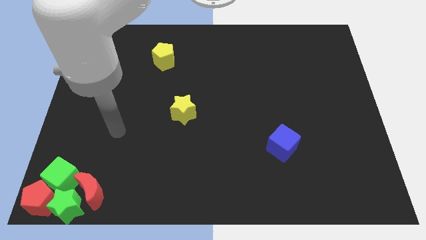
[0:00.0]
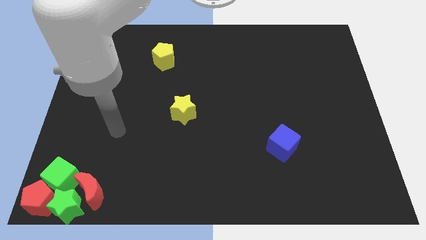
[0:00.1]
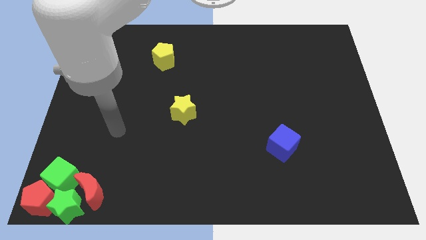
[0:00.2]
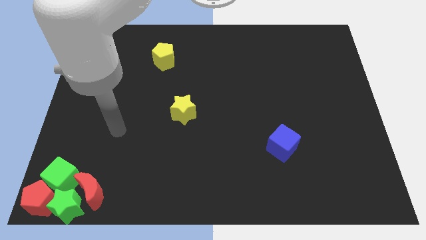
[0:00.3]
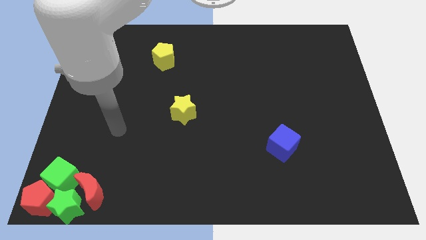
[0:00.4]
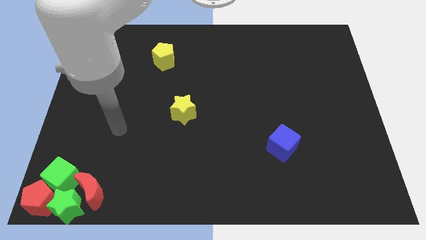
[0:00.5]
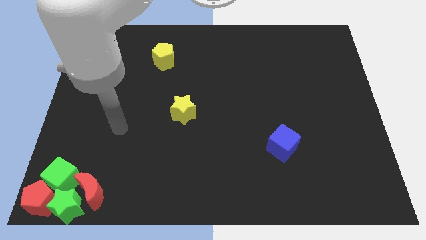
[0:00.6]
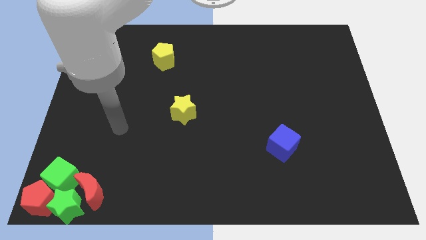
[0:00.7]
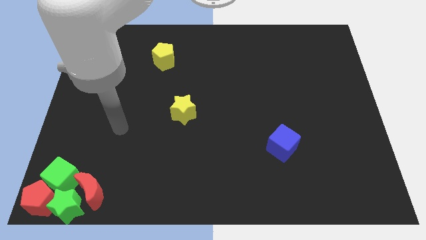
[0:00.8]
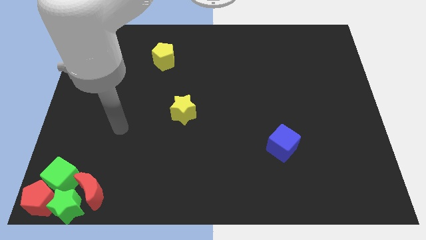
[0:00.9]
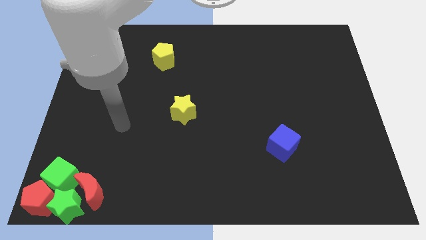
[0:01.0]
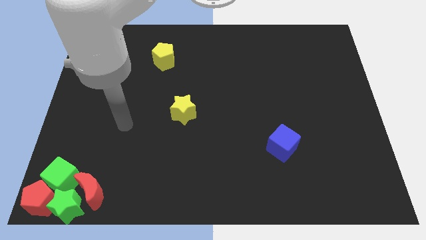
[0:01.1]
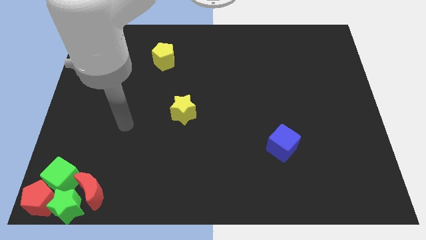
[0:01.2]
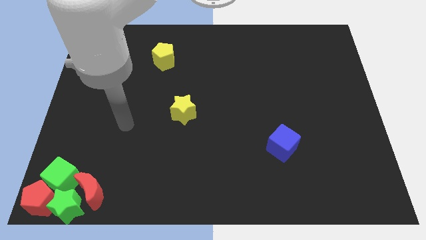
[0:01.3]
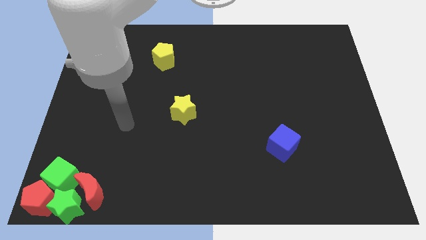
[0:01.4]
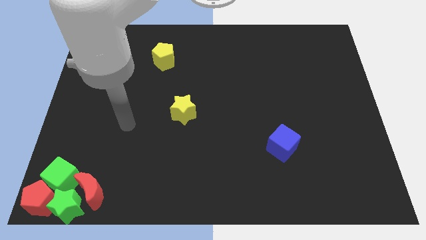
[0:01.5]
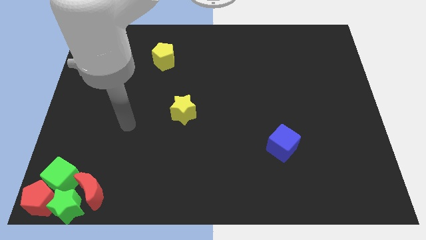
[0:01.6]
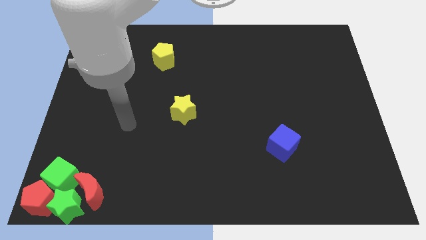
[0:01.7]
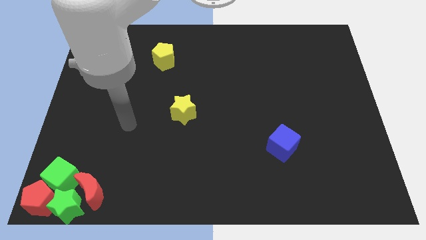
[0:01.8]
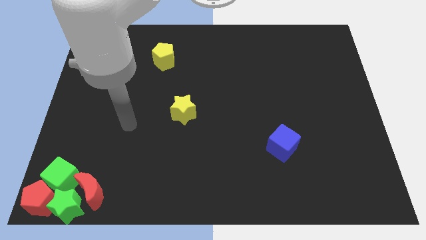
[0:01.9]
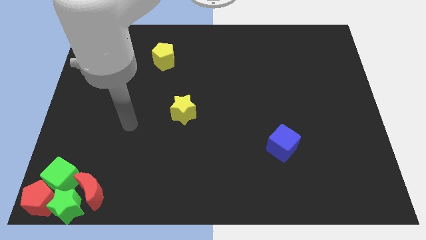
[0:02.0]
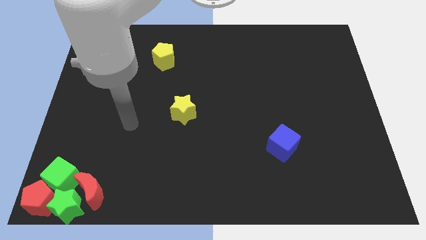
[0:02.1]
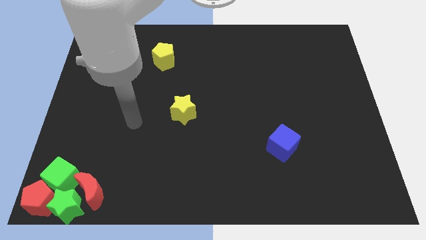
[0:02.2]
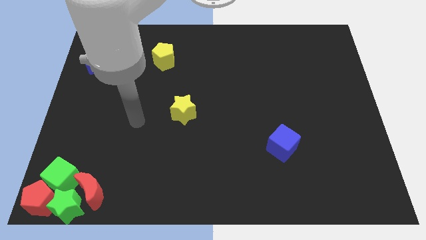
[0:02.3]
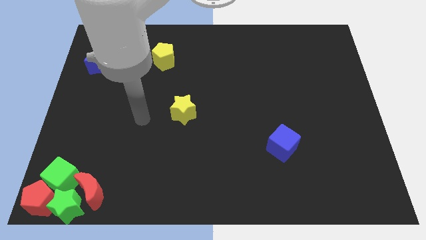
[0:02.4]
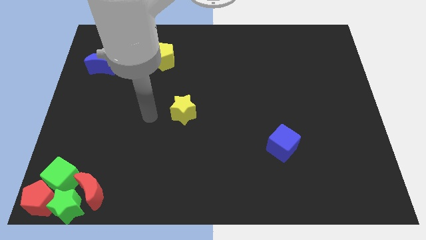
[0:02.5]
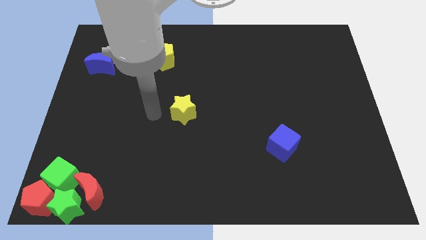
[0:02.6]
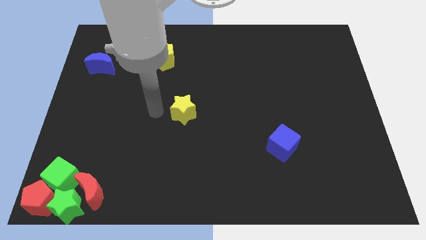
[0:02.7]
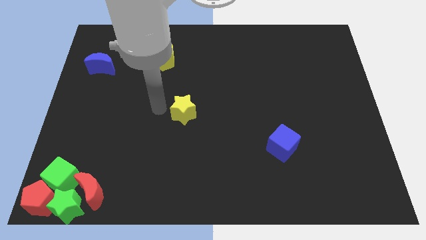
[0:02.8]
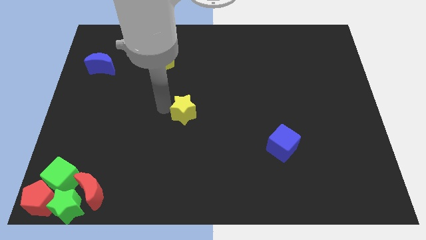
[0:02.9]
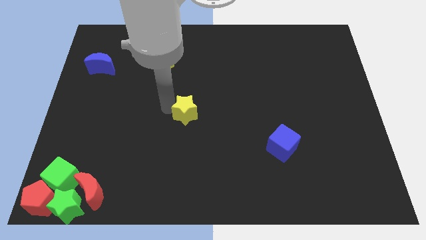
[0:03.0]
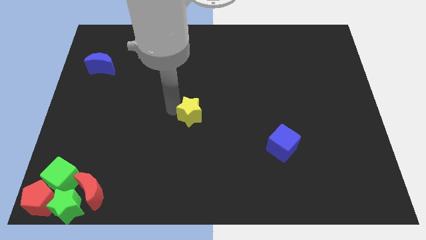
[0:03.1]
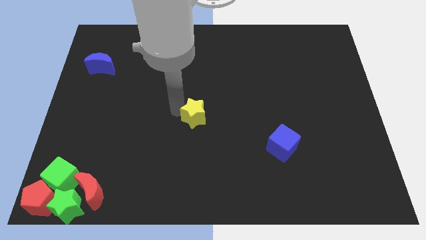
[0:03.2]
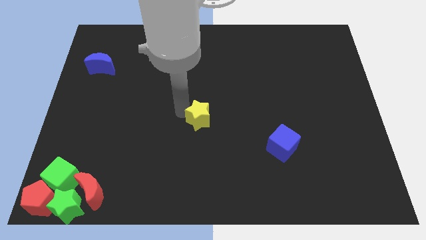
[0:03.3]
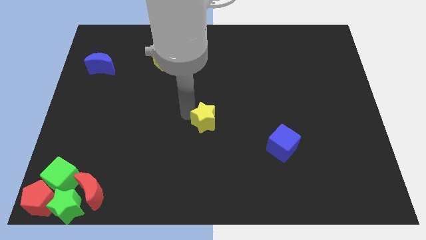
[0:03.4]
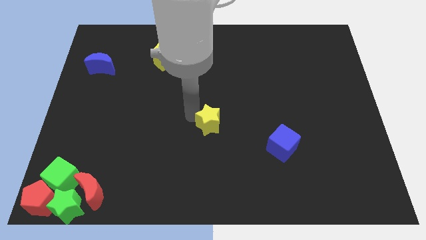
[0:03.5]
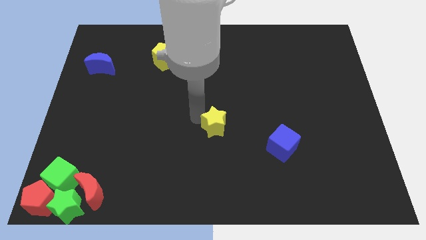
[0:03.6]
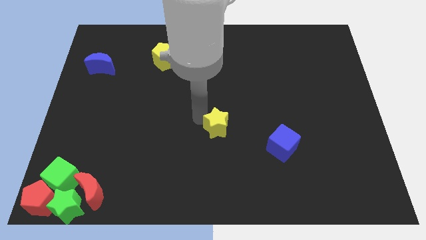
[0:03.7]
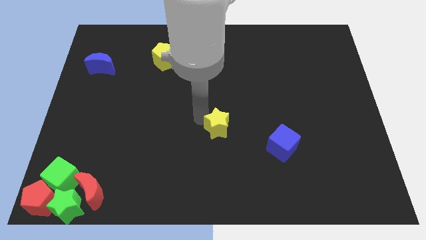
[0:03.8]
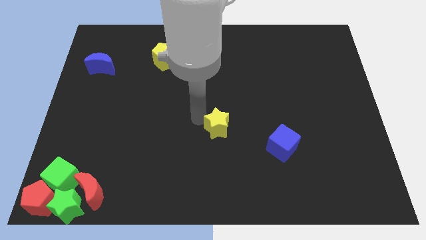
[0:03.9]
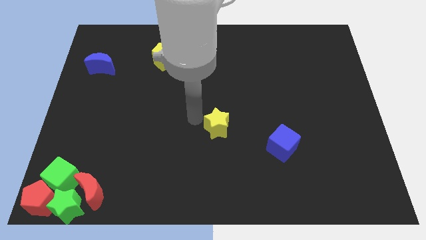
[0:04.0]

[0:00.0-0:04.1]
push the yellow star to the center of the board

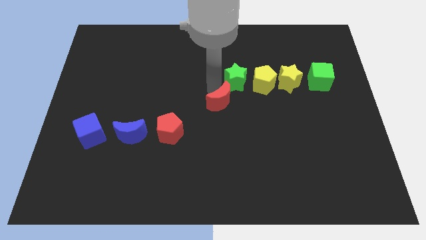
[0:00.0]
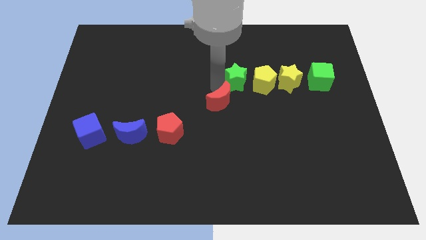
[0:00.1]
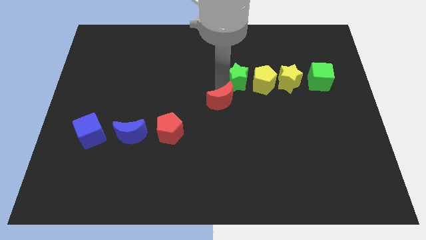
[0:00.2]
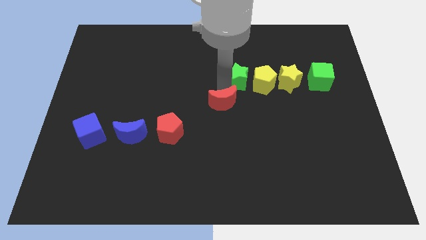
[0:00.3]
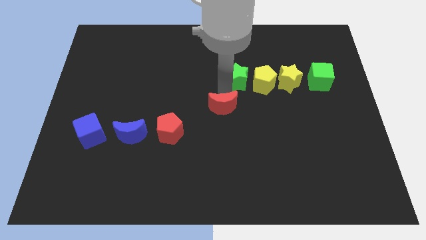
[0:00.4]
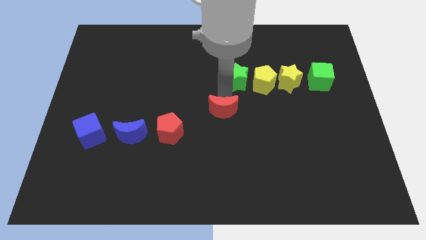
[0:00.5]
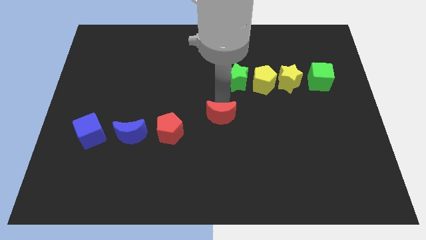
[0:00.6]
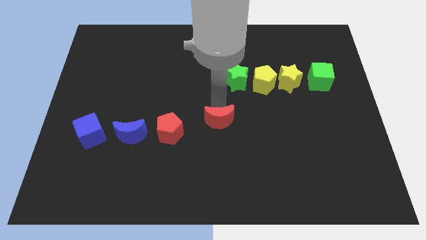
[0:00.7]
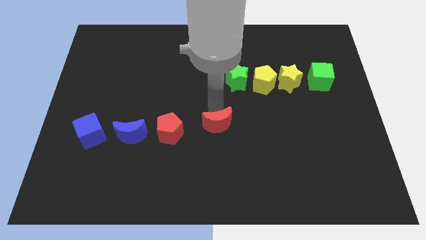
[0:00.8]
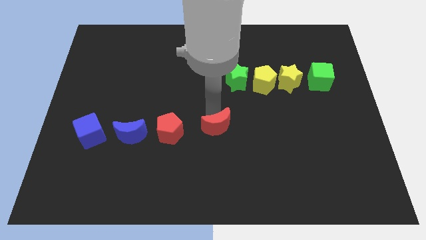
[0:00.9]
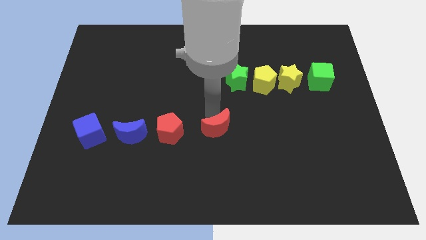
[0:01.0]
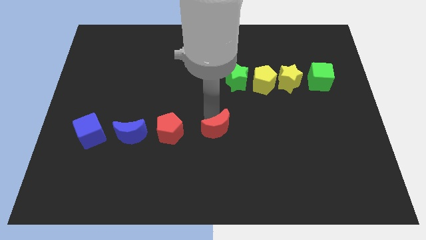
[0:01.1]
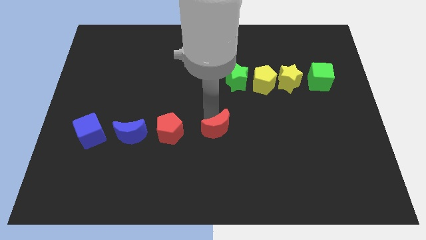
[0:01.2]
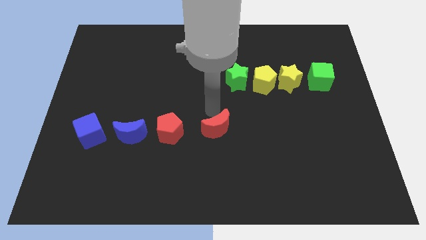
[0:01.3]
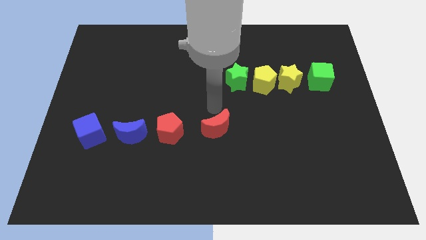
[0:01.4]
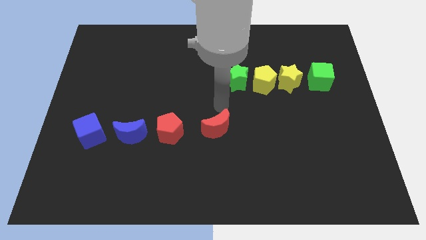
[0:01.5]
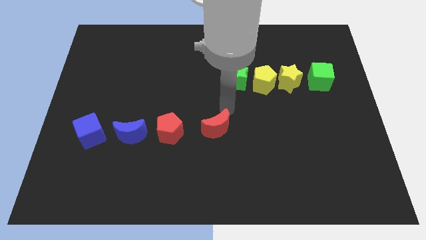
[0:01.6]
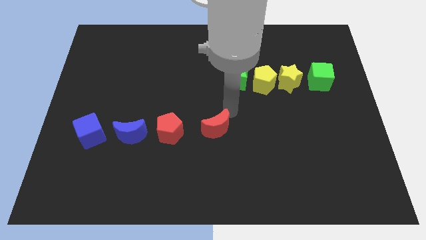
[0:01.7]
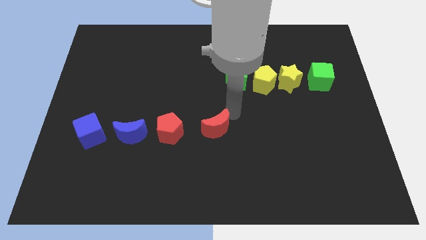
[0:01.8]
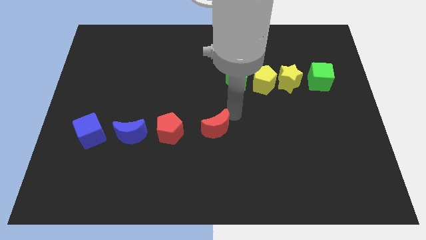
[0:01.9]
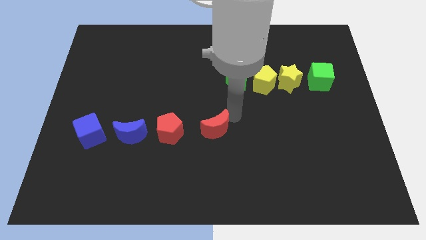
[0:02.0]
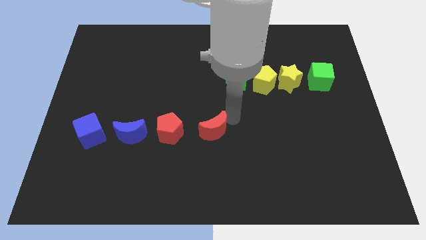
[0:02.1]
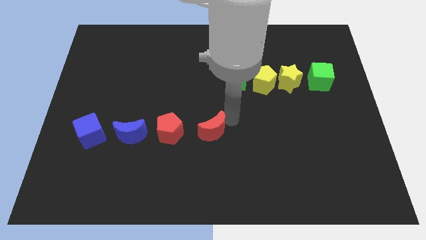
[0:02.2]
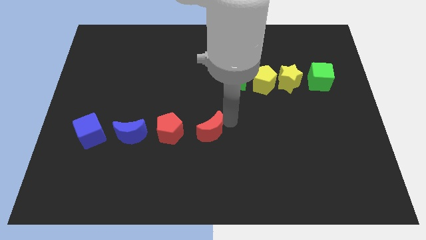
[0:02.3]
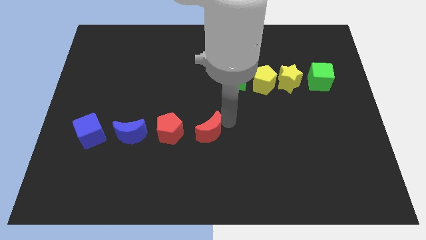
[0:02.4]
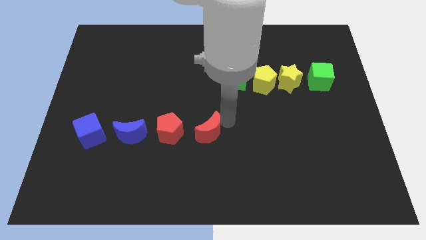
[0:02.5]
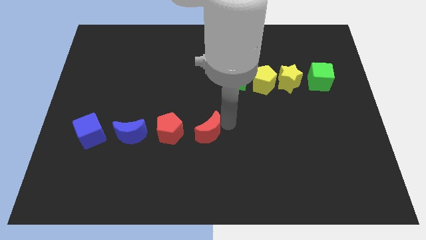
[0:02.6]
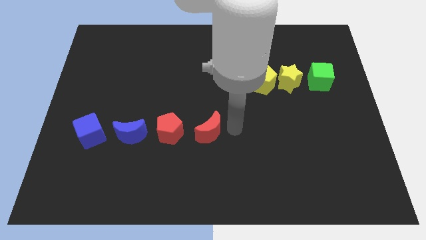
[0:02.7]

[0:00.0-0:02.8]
put the red moon at the right side of the red pentagon

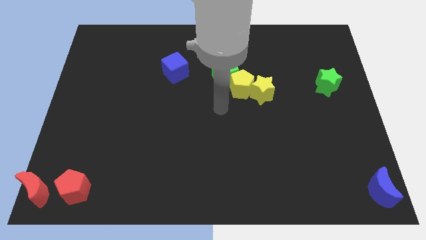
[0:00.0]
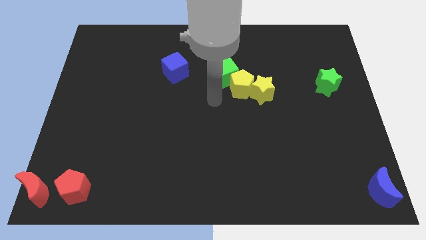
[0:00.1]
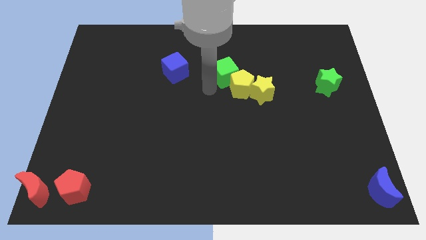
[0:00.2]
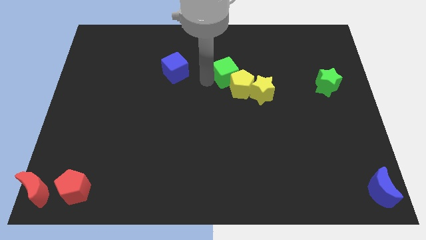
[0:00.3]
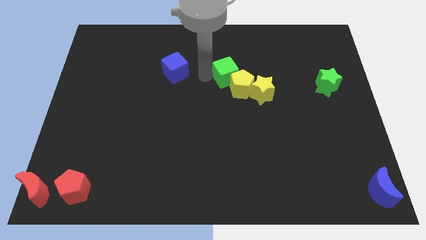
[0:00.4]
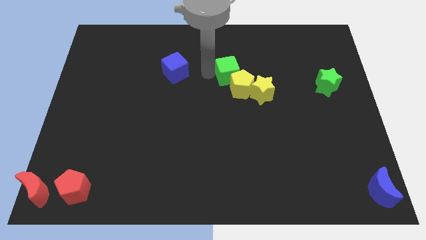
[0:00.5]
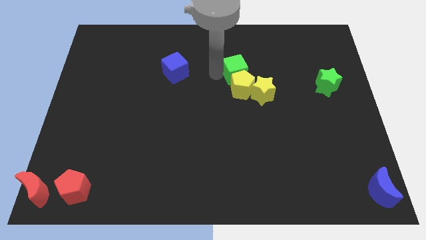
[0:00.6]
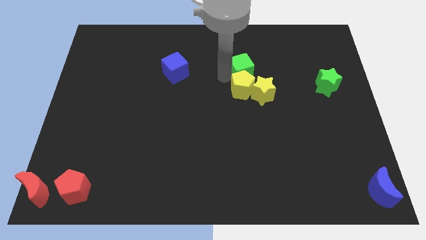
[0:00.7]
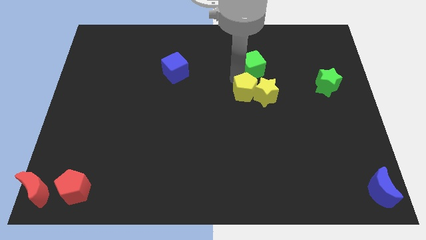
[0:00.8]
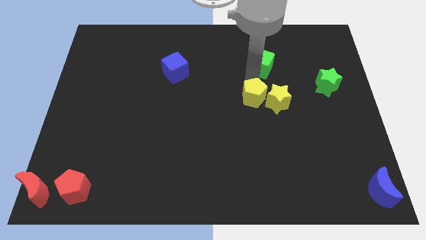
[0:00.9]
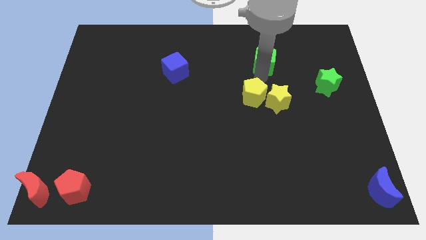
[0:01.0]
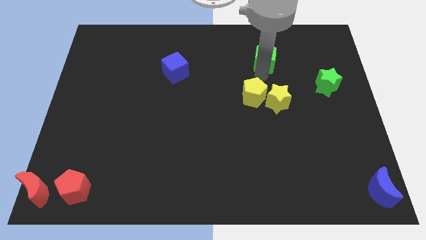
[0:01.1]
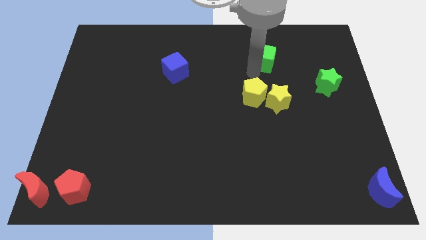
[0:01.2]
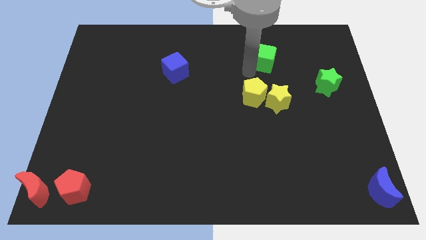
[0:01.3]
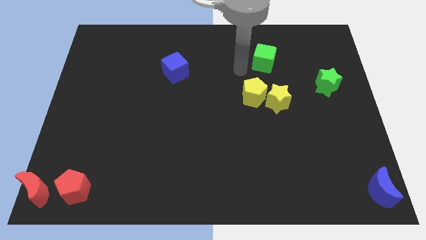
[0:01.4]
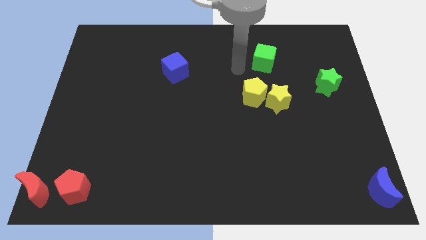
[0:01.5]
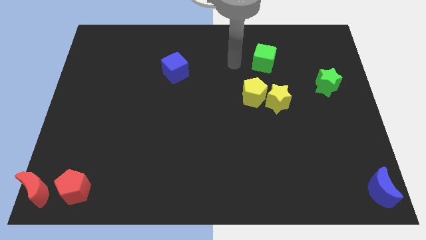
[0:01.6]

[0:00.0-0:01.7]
separate the green cube from the yellow pentagon

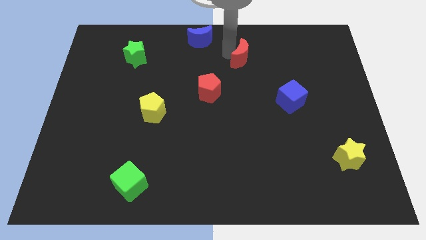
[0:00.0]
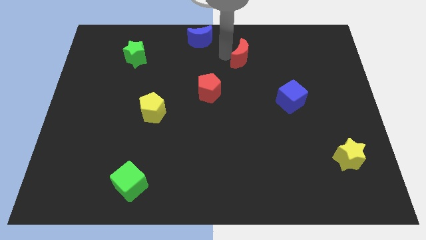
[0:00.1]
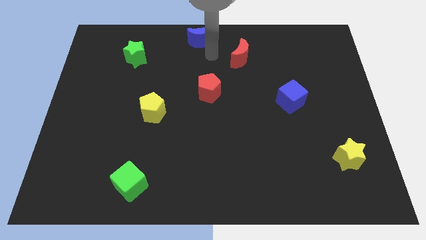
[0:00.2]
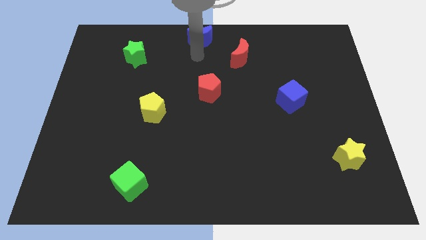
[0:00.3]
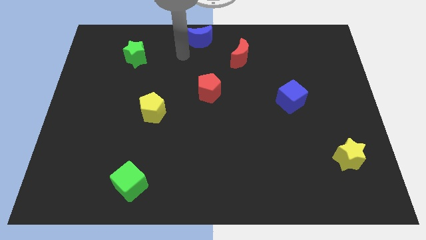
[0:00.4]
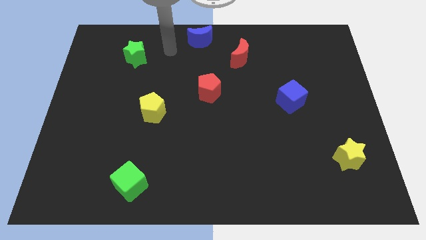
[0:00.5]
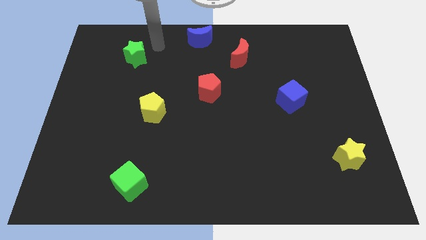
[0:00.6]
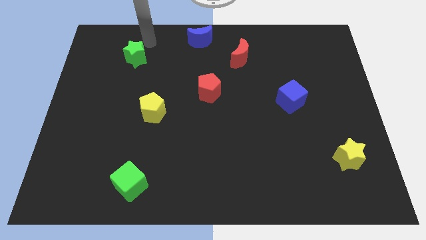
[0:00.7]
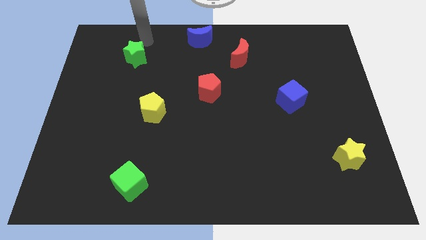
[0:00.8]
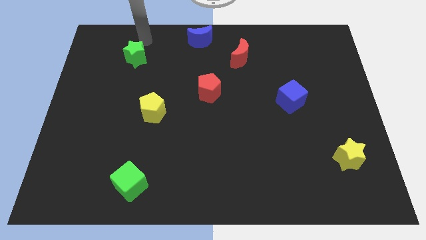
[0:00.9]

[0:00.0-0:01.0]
move your arm to the top center
